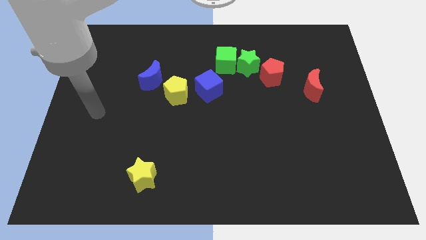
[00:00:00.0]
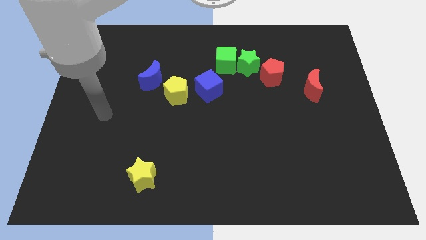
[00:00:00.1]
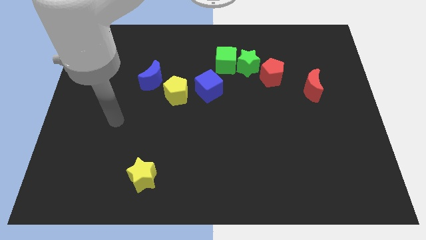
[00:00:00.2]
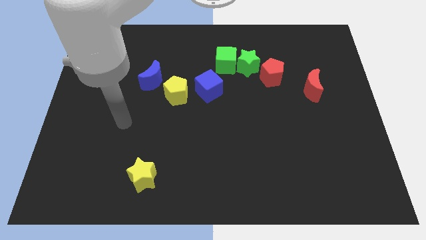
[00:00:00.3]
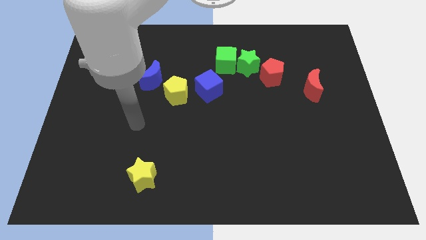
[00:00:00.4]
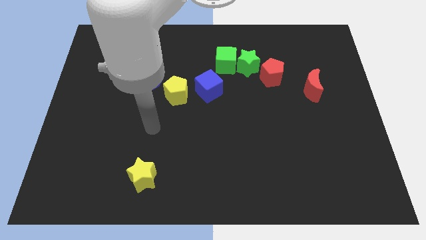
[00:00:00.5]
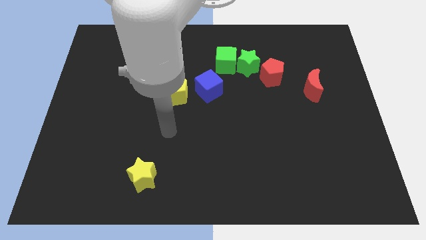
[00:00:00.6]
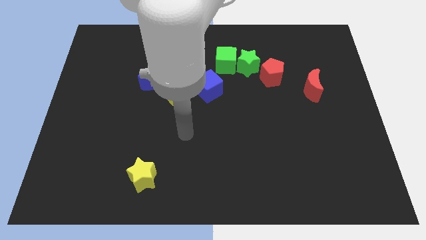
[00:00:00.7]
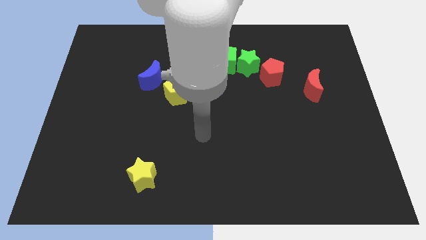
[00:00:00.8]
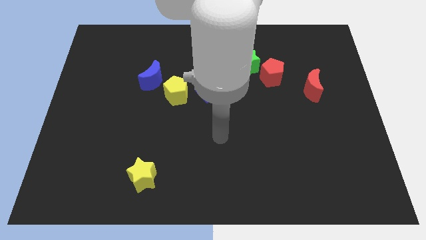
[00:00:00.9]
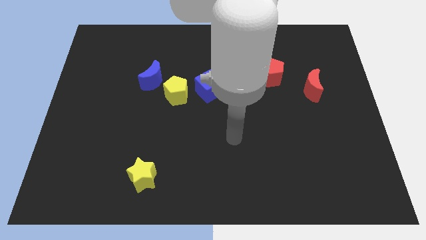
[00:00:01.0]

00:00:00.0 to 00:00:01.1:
place arm in the center

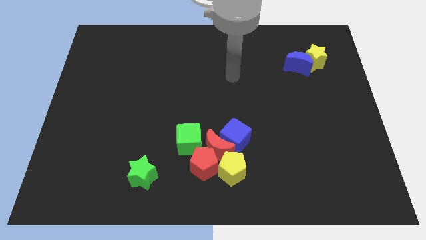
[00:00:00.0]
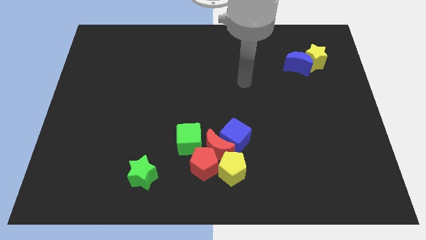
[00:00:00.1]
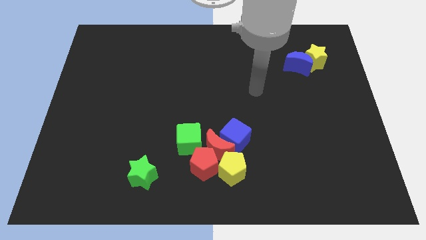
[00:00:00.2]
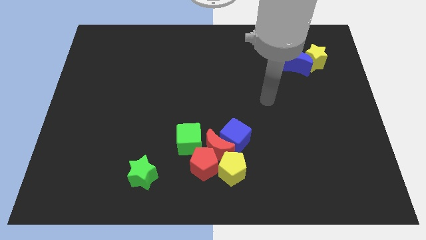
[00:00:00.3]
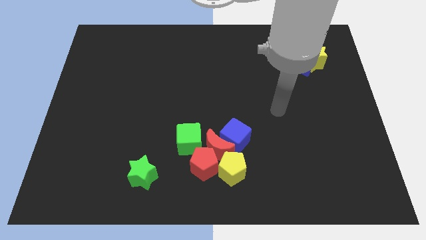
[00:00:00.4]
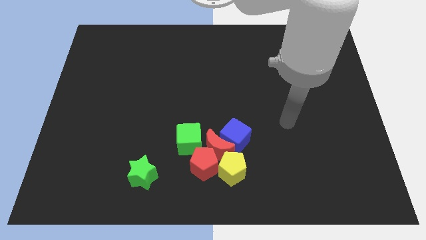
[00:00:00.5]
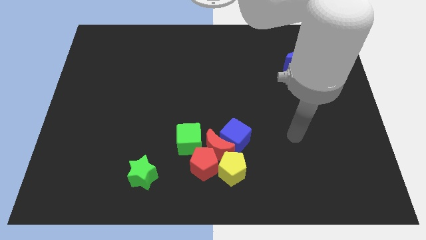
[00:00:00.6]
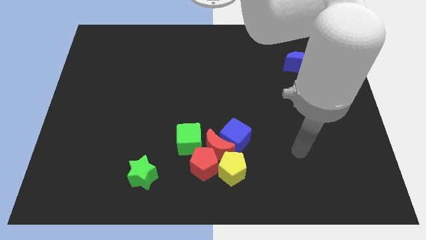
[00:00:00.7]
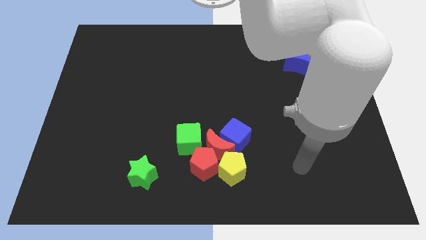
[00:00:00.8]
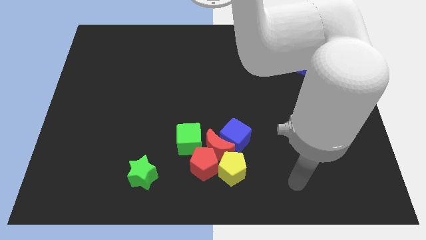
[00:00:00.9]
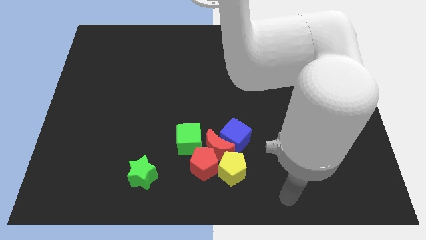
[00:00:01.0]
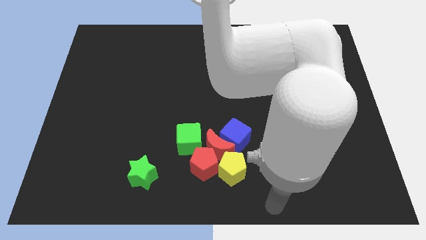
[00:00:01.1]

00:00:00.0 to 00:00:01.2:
move your arm towards the bottom side of the board

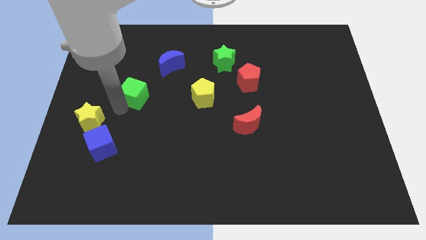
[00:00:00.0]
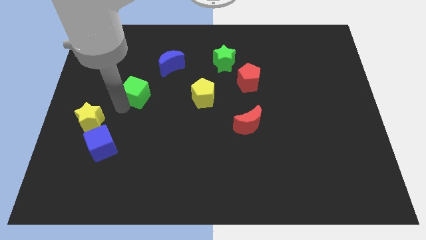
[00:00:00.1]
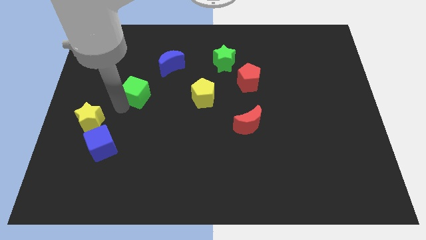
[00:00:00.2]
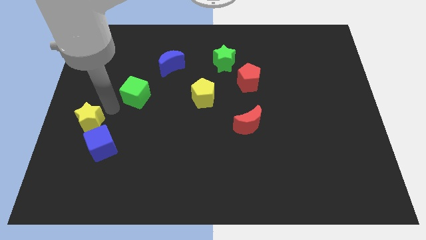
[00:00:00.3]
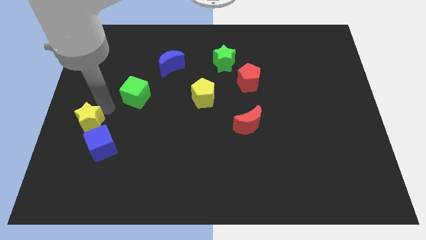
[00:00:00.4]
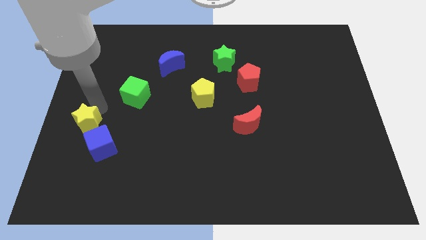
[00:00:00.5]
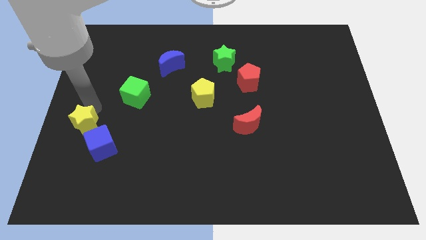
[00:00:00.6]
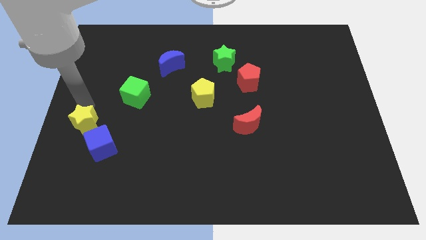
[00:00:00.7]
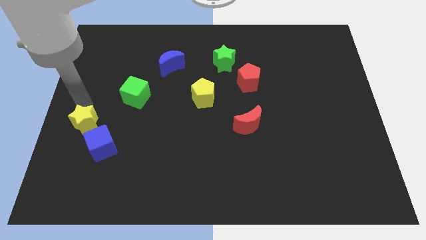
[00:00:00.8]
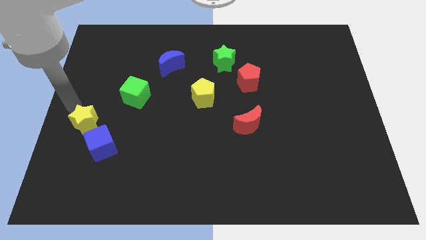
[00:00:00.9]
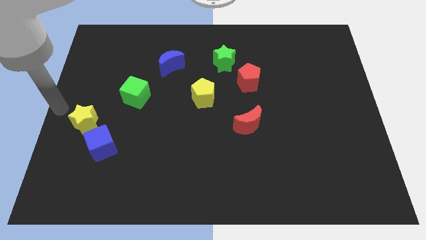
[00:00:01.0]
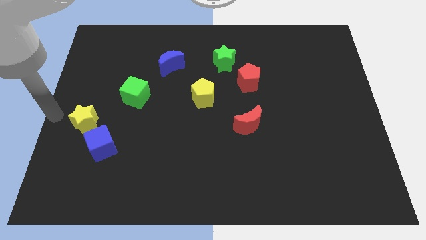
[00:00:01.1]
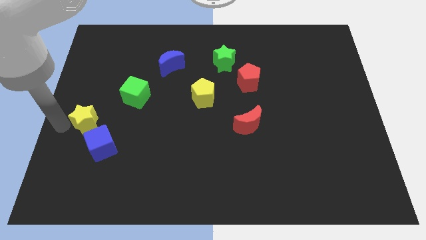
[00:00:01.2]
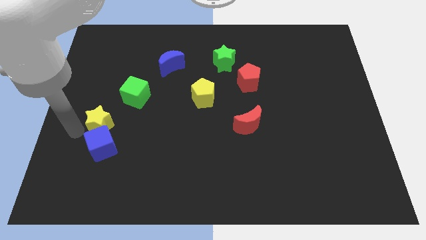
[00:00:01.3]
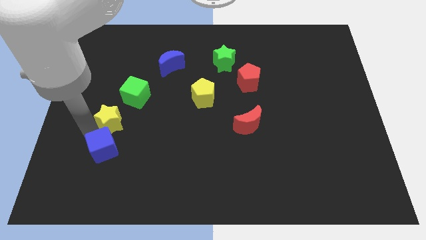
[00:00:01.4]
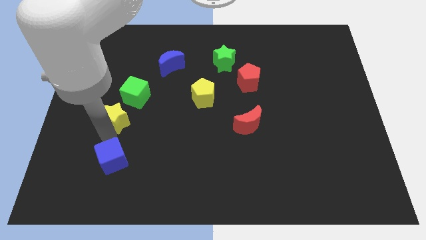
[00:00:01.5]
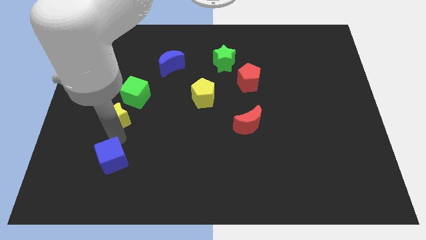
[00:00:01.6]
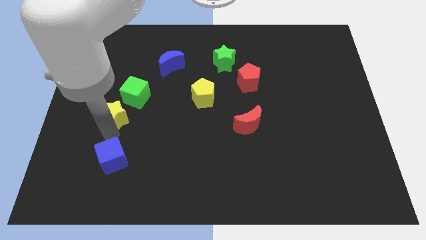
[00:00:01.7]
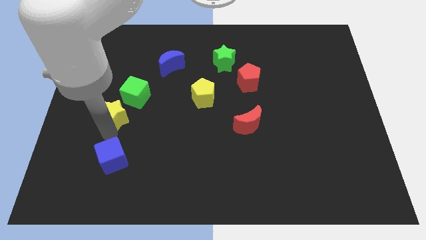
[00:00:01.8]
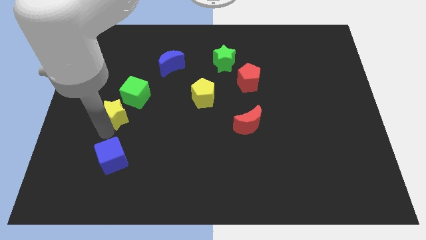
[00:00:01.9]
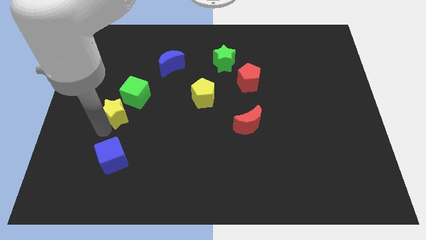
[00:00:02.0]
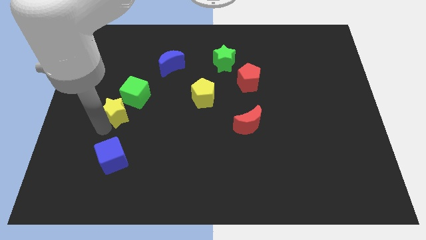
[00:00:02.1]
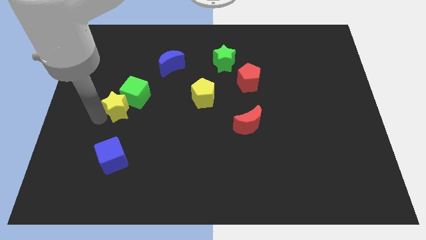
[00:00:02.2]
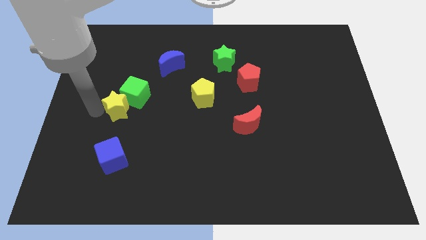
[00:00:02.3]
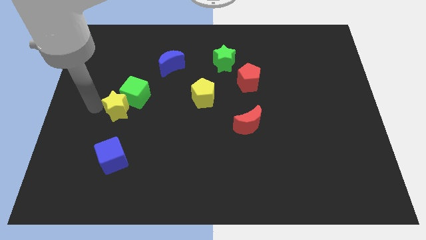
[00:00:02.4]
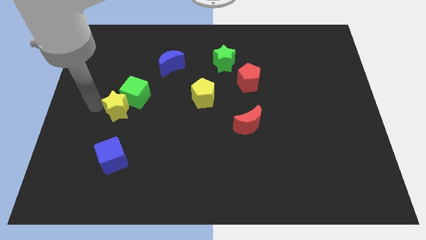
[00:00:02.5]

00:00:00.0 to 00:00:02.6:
separate the yellow star from the blue cube

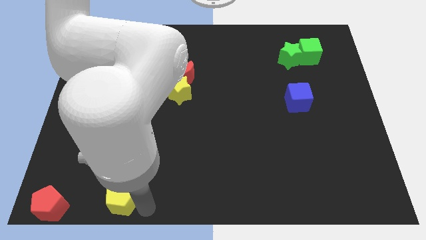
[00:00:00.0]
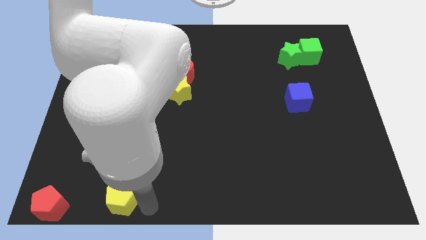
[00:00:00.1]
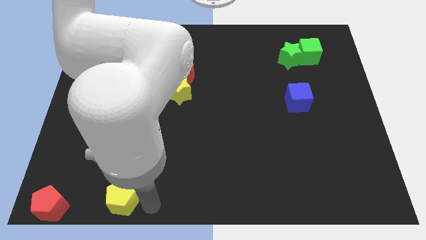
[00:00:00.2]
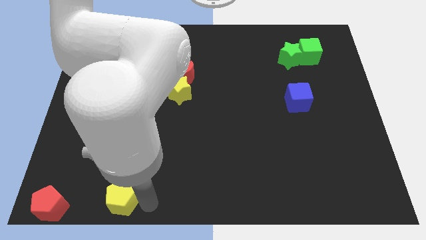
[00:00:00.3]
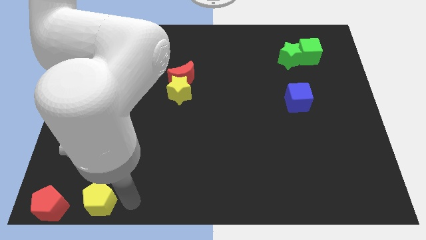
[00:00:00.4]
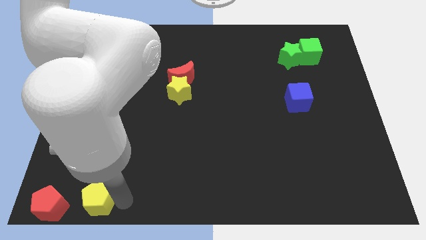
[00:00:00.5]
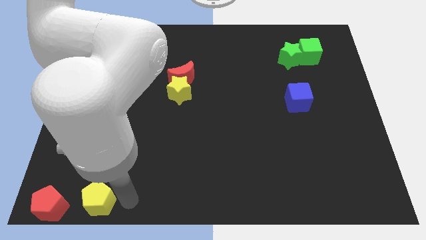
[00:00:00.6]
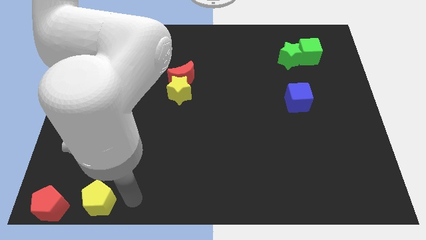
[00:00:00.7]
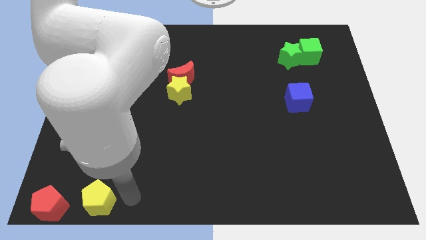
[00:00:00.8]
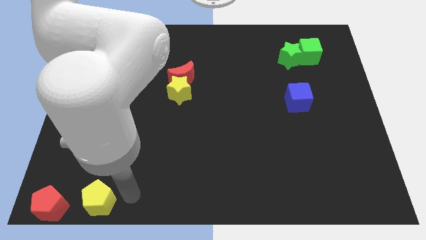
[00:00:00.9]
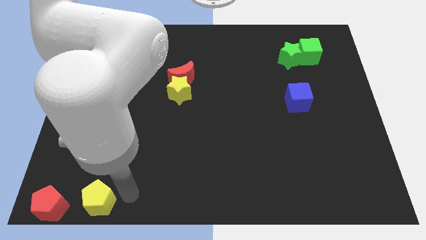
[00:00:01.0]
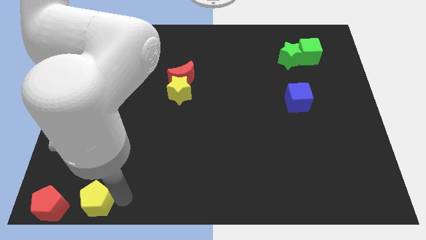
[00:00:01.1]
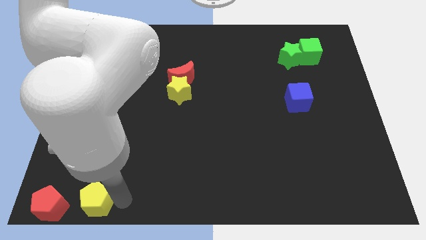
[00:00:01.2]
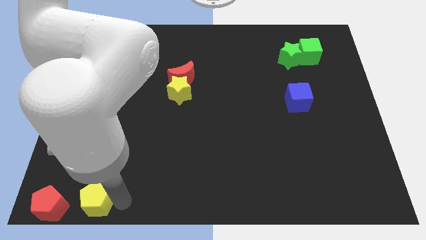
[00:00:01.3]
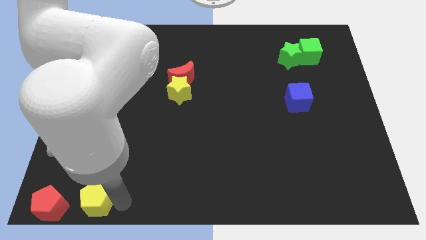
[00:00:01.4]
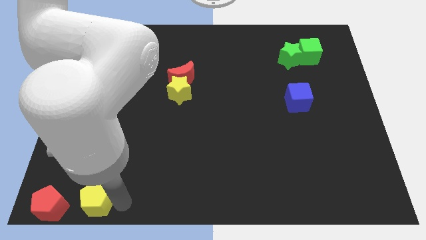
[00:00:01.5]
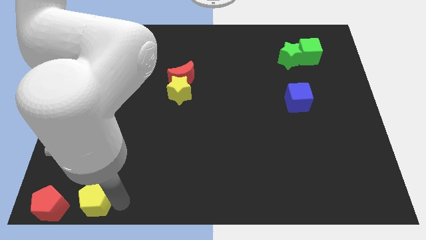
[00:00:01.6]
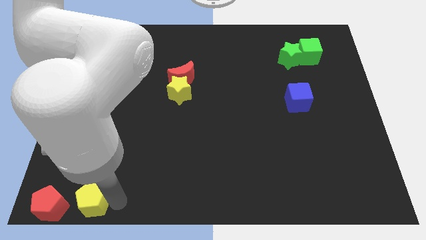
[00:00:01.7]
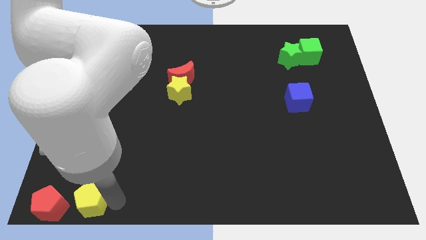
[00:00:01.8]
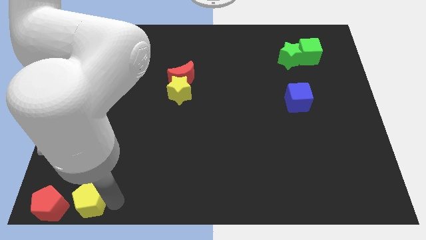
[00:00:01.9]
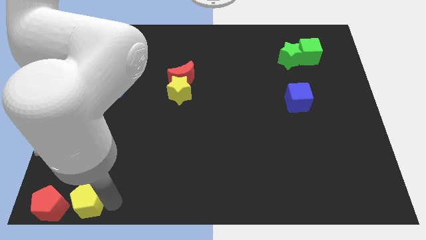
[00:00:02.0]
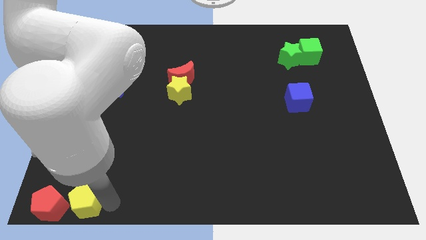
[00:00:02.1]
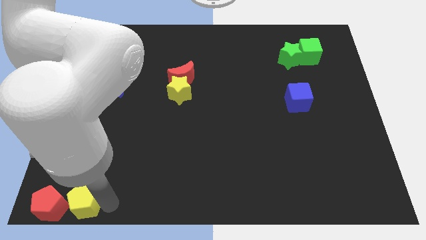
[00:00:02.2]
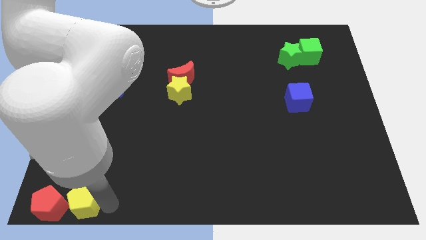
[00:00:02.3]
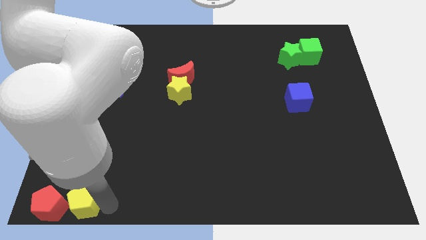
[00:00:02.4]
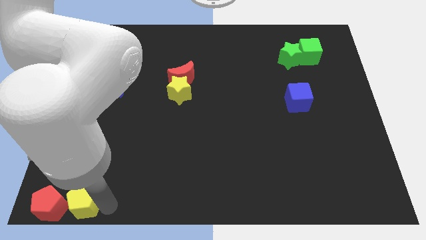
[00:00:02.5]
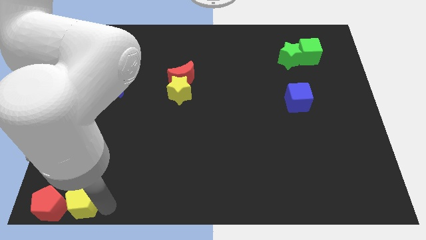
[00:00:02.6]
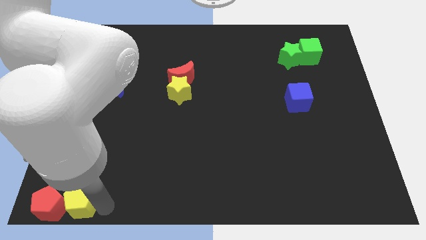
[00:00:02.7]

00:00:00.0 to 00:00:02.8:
move the yellow pentagon right beside the red pentagon

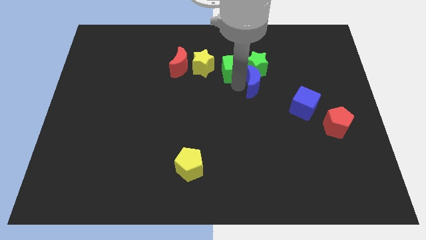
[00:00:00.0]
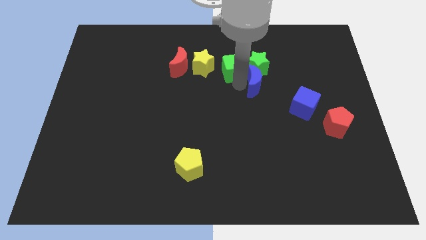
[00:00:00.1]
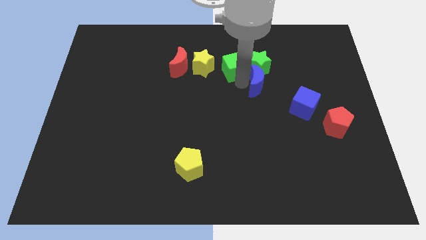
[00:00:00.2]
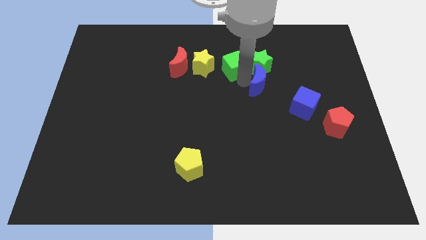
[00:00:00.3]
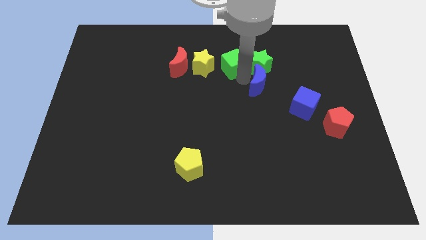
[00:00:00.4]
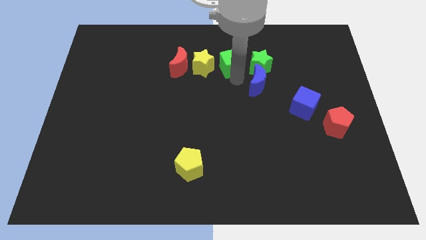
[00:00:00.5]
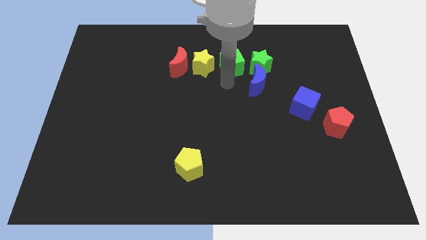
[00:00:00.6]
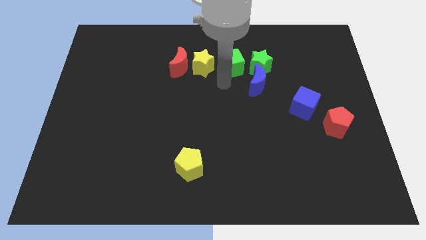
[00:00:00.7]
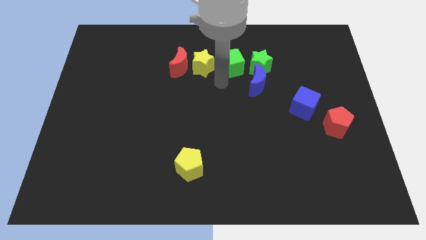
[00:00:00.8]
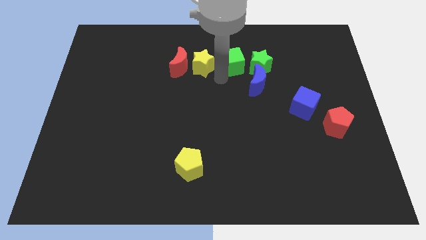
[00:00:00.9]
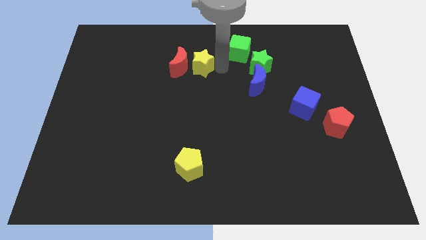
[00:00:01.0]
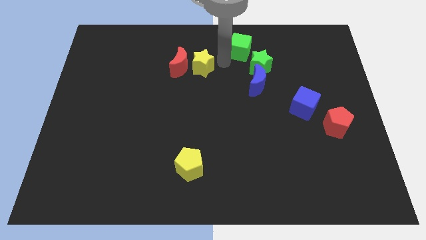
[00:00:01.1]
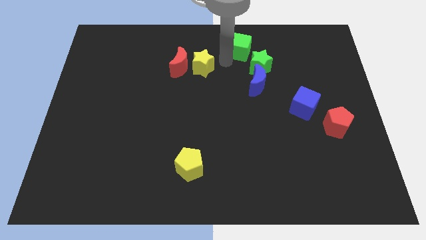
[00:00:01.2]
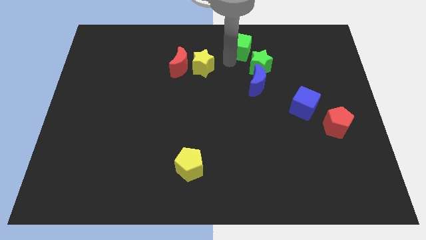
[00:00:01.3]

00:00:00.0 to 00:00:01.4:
move green cube slightly away from the green star
